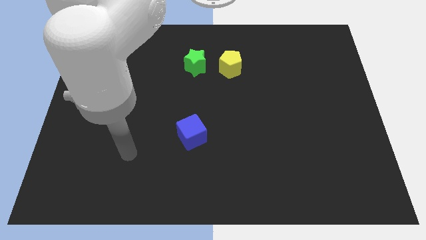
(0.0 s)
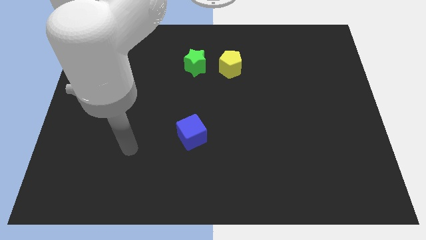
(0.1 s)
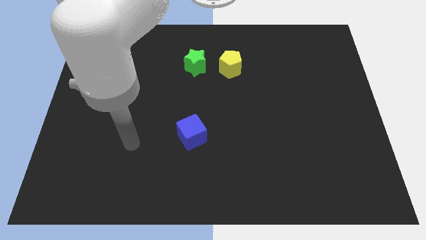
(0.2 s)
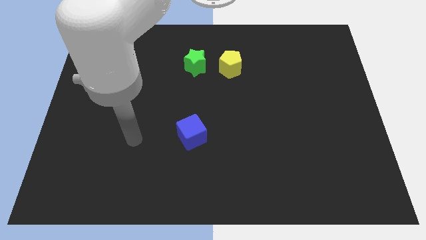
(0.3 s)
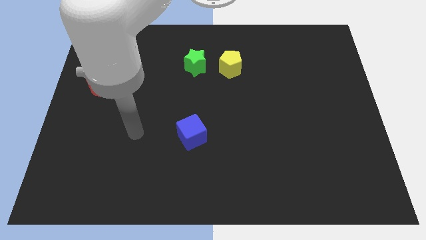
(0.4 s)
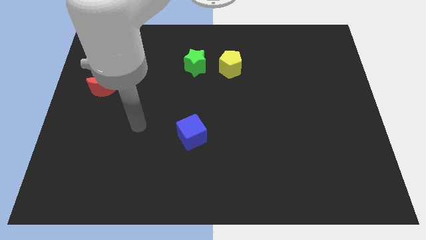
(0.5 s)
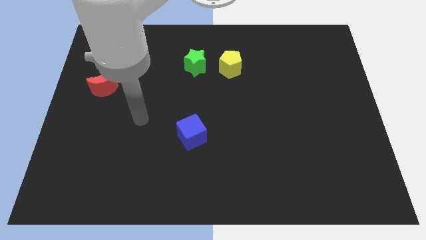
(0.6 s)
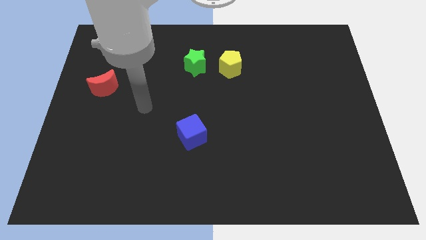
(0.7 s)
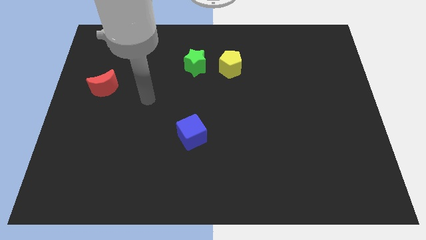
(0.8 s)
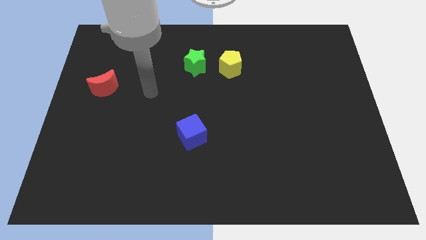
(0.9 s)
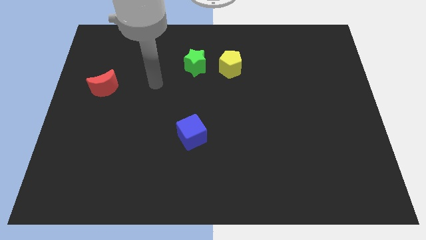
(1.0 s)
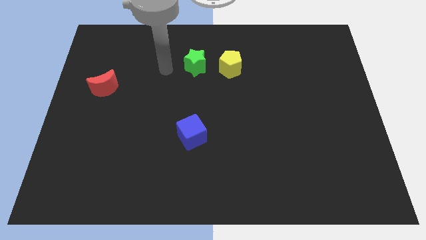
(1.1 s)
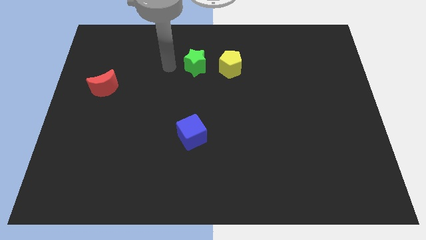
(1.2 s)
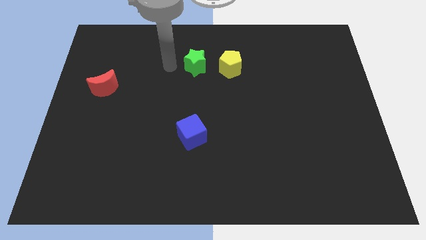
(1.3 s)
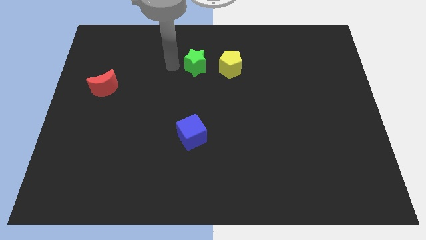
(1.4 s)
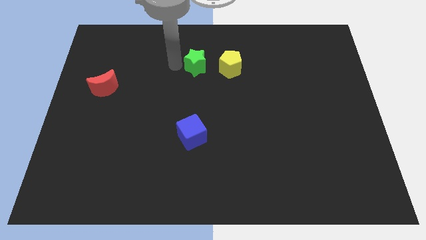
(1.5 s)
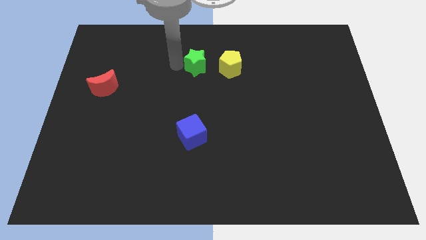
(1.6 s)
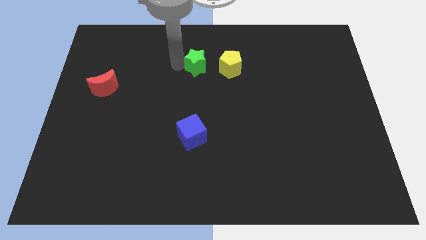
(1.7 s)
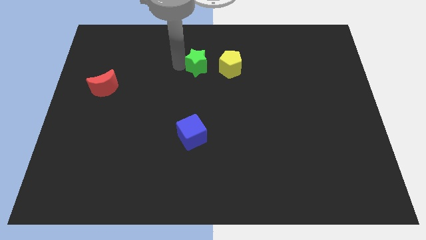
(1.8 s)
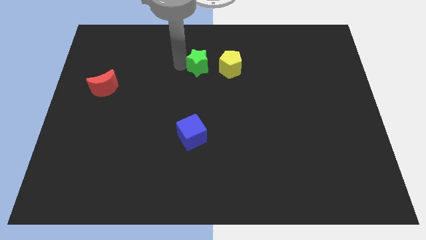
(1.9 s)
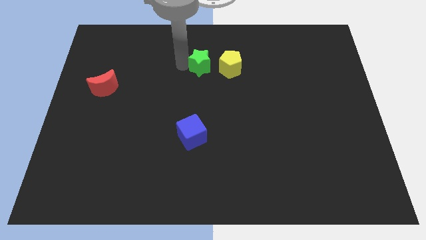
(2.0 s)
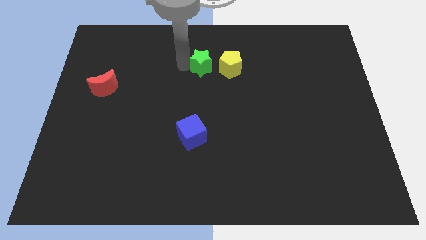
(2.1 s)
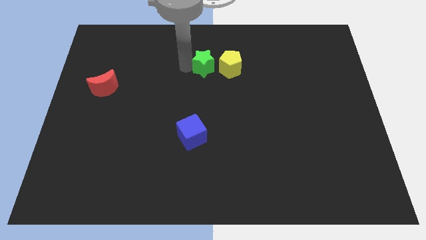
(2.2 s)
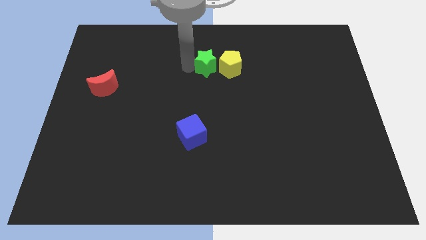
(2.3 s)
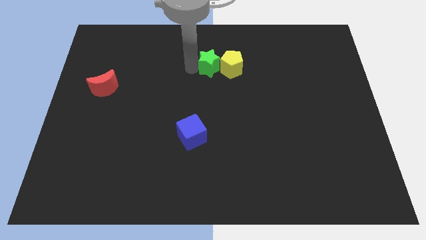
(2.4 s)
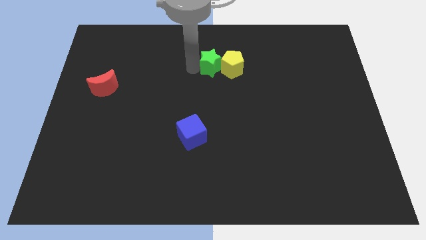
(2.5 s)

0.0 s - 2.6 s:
move the green block to the pentagon

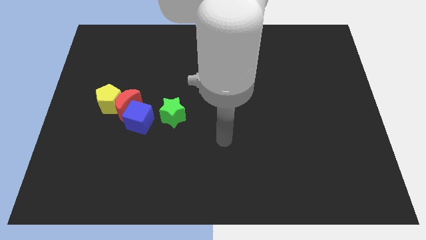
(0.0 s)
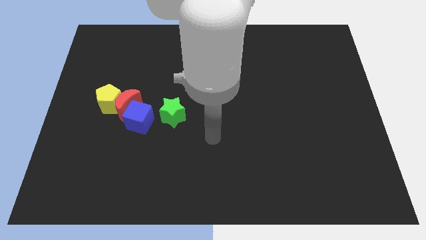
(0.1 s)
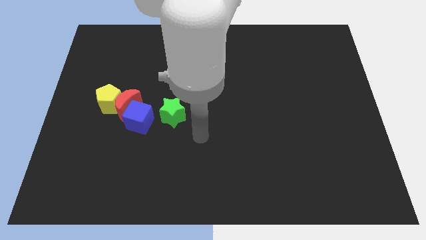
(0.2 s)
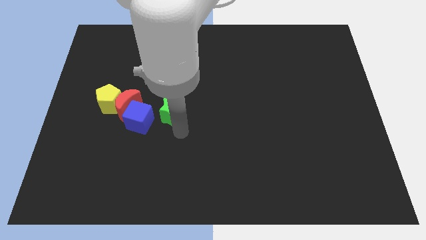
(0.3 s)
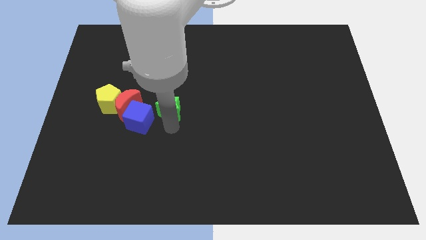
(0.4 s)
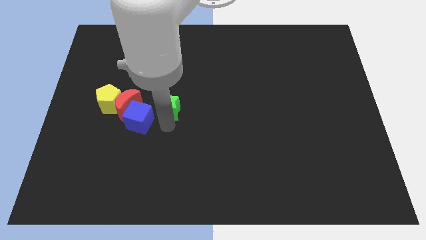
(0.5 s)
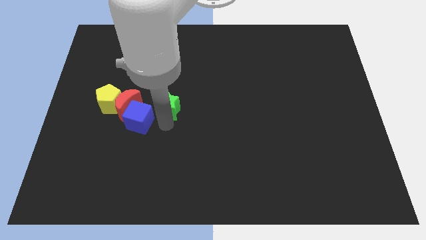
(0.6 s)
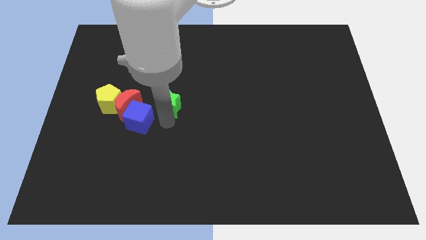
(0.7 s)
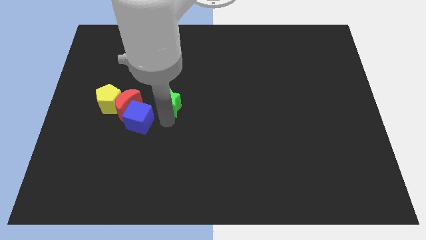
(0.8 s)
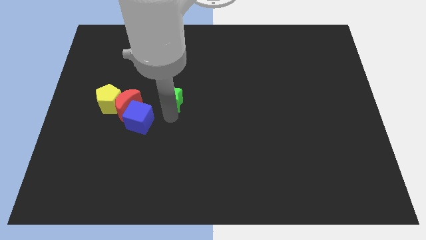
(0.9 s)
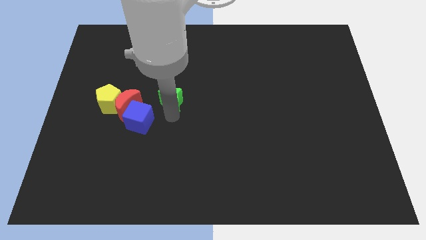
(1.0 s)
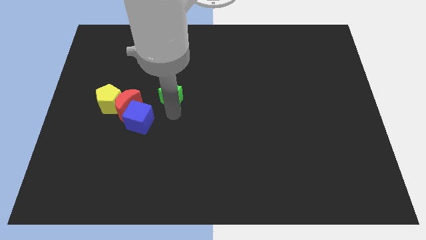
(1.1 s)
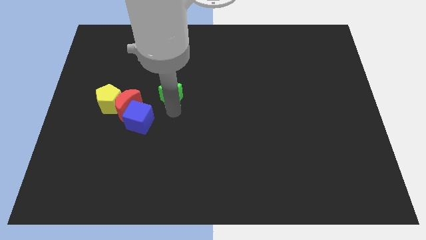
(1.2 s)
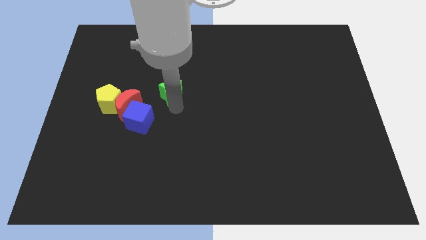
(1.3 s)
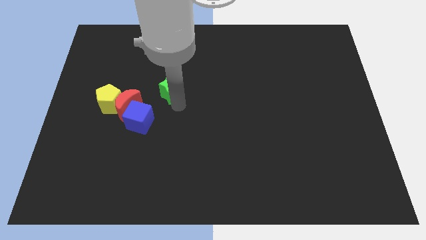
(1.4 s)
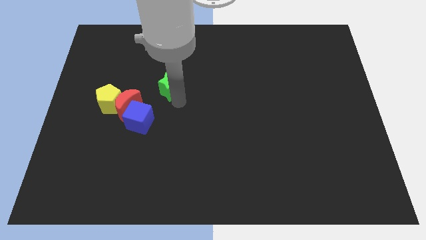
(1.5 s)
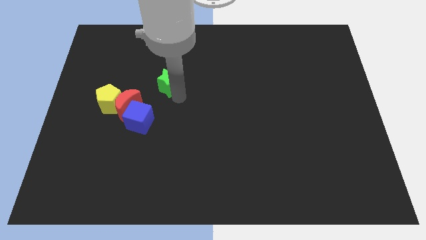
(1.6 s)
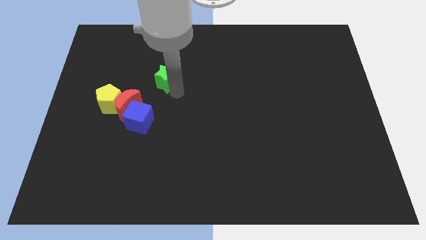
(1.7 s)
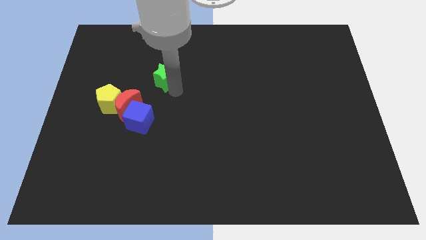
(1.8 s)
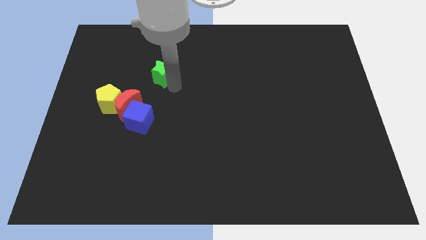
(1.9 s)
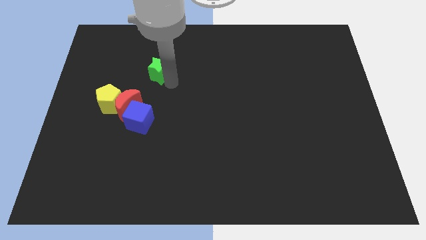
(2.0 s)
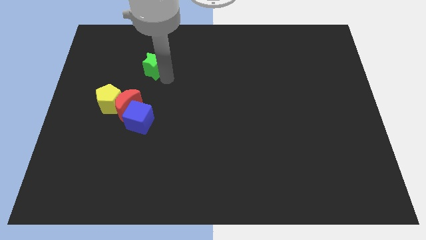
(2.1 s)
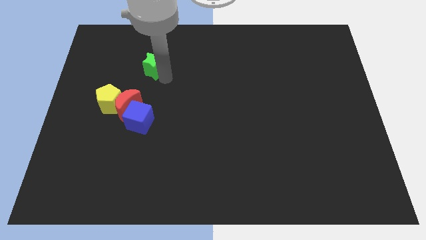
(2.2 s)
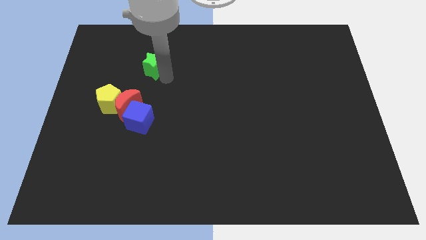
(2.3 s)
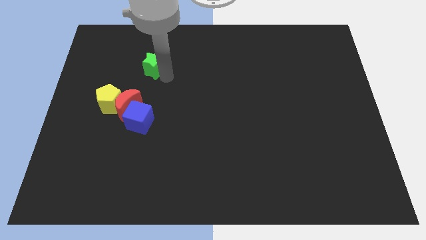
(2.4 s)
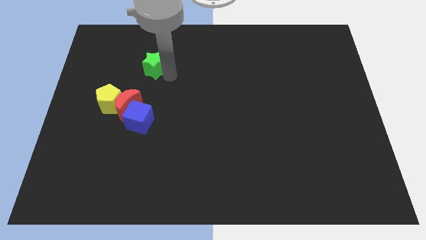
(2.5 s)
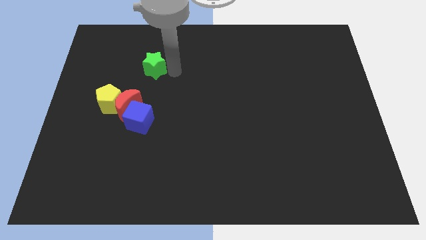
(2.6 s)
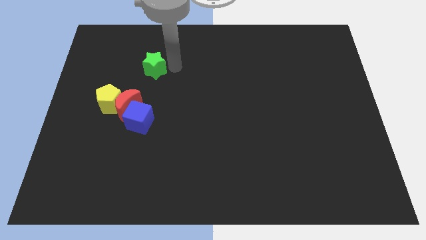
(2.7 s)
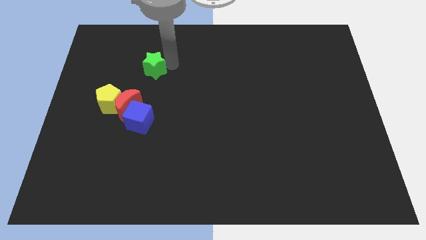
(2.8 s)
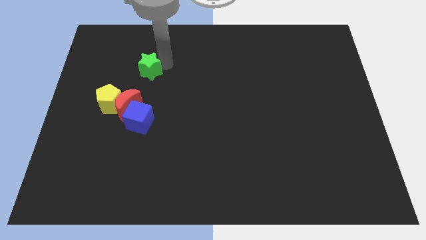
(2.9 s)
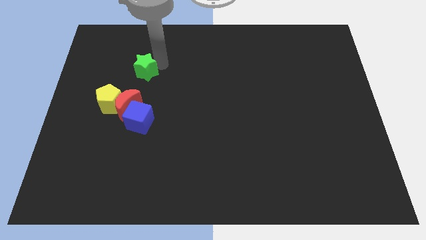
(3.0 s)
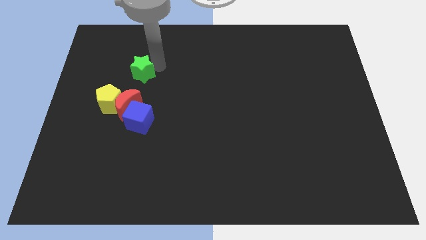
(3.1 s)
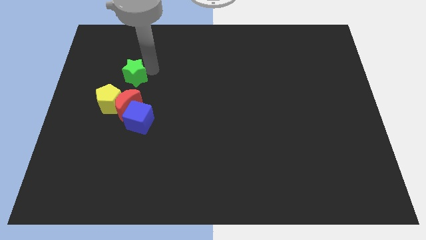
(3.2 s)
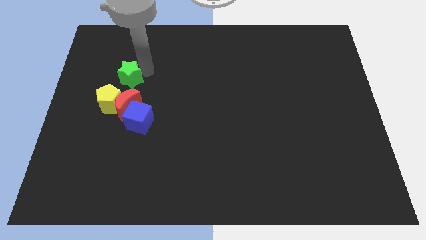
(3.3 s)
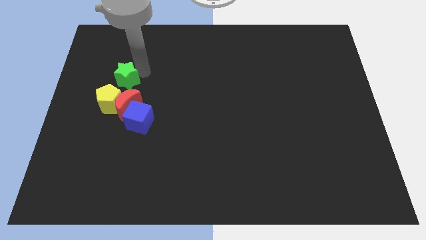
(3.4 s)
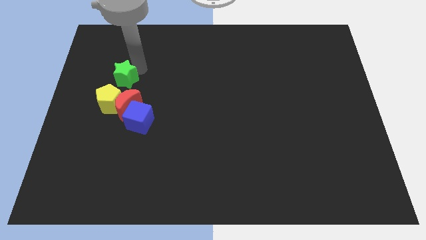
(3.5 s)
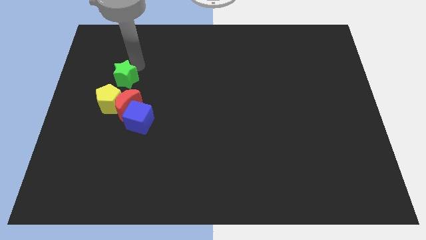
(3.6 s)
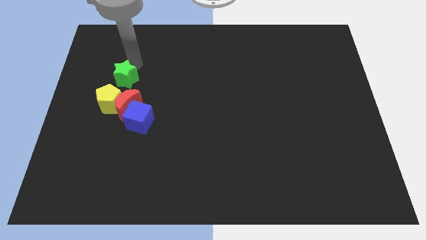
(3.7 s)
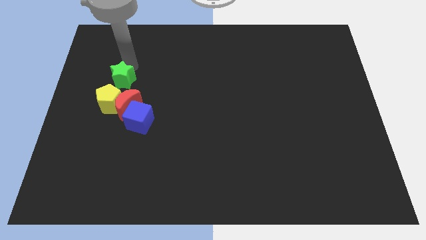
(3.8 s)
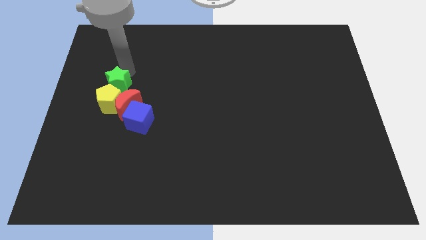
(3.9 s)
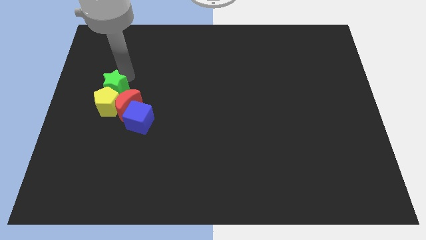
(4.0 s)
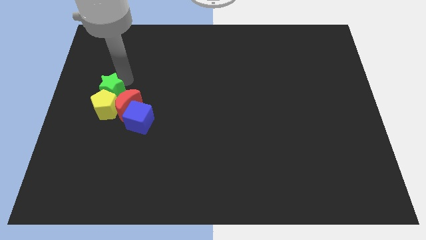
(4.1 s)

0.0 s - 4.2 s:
slide the star towards the yellow pentagon

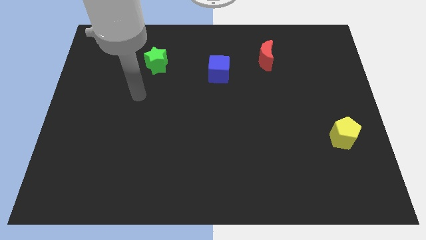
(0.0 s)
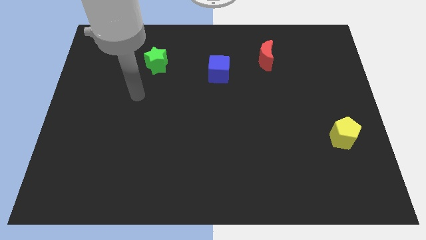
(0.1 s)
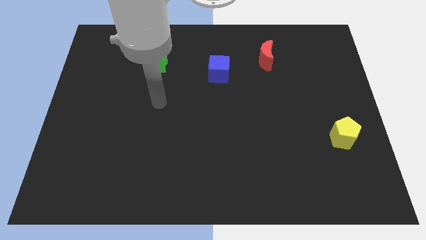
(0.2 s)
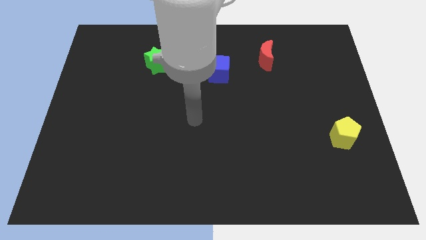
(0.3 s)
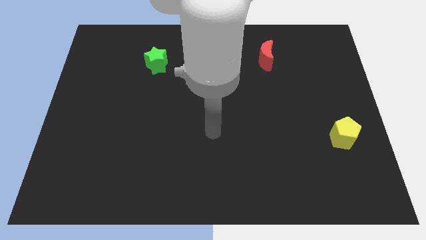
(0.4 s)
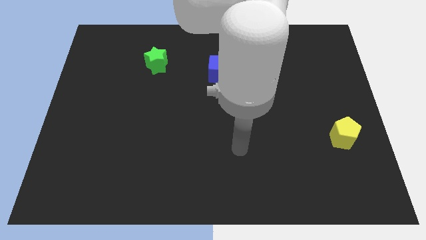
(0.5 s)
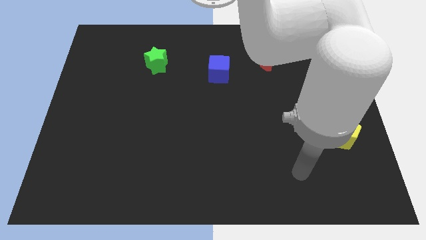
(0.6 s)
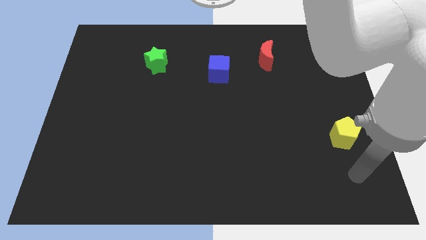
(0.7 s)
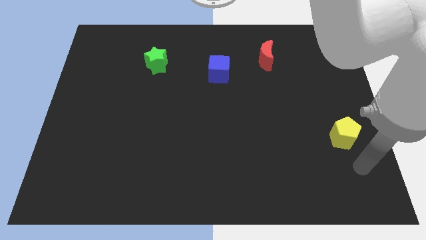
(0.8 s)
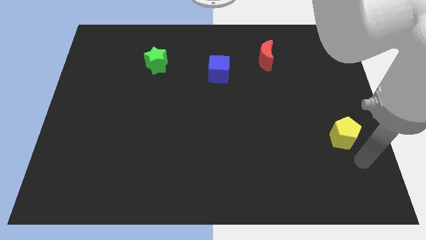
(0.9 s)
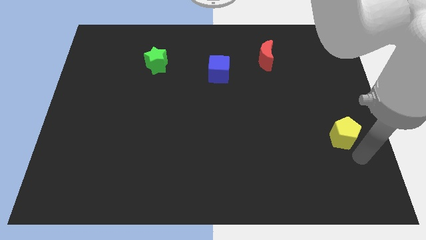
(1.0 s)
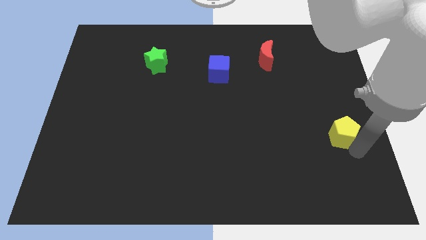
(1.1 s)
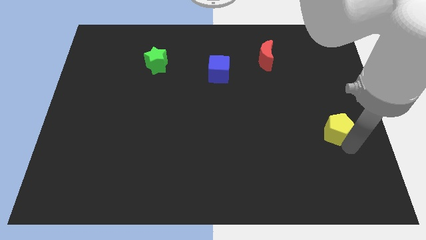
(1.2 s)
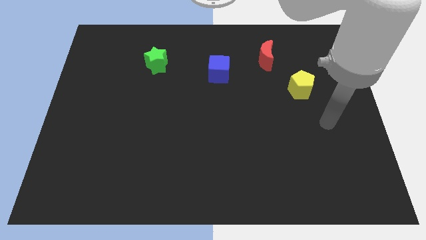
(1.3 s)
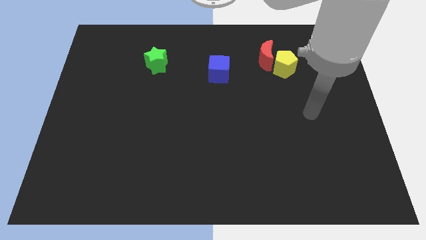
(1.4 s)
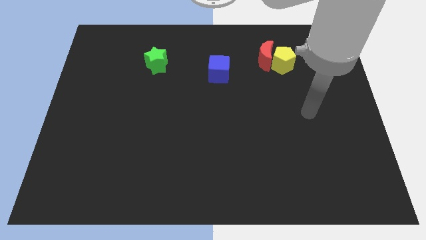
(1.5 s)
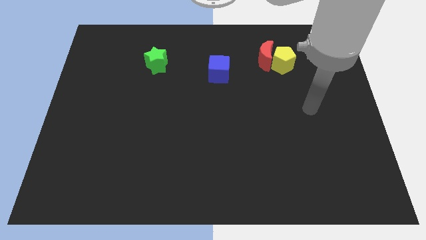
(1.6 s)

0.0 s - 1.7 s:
slide the yellow pentagon towards the moon
